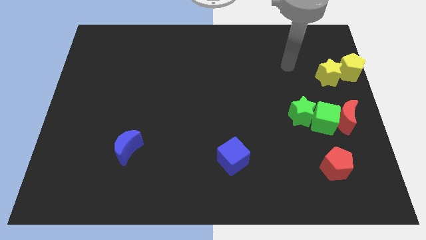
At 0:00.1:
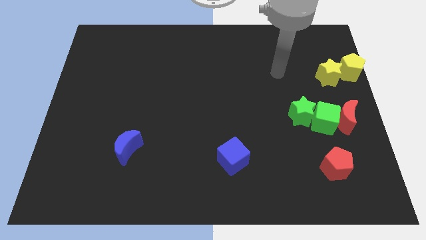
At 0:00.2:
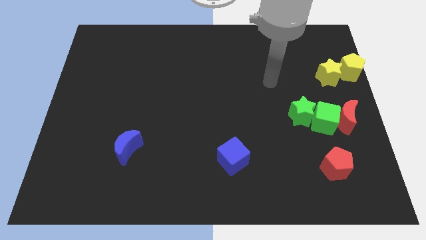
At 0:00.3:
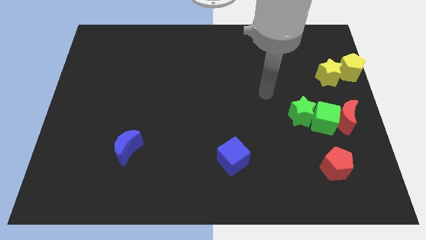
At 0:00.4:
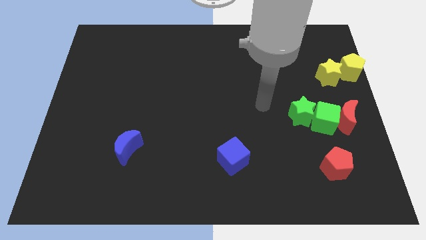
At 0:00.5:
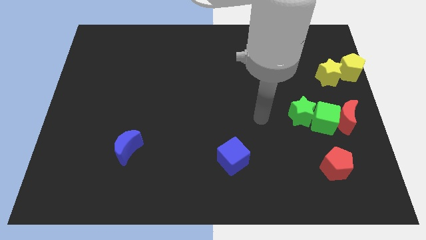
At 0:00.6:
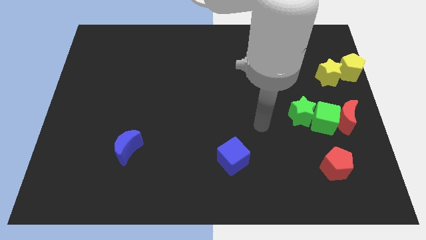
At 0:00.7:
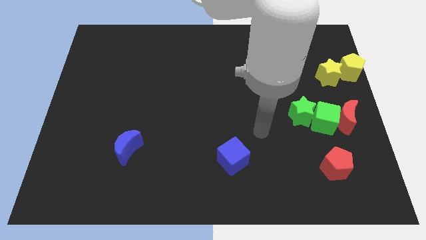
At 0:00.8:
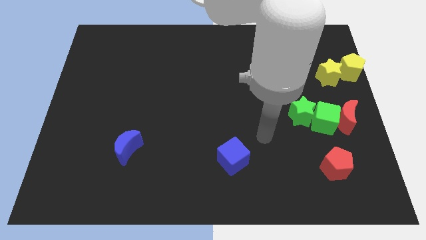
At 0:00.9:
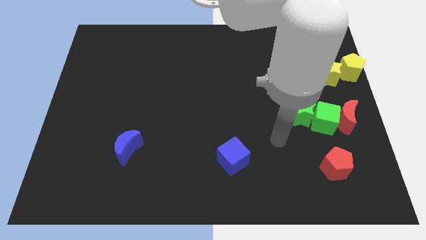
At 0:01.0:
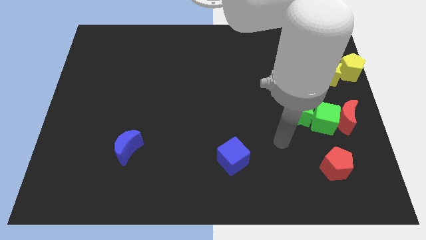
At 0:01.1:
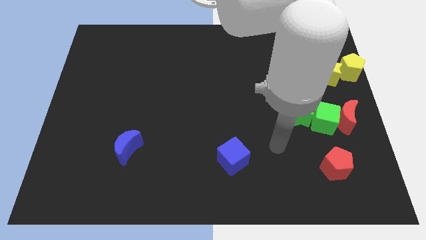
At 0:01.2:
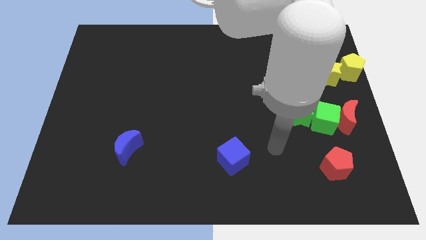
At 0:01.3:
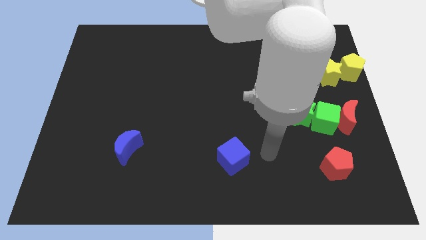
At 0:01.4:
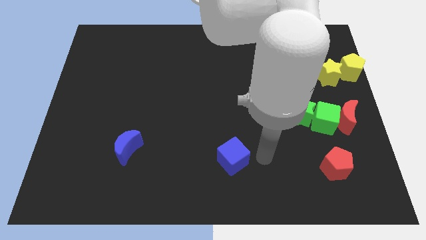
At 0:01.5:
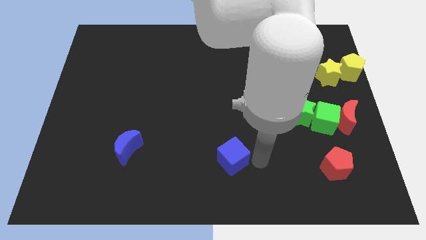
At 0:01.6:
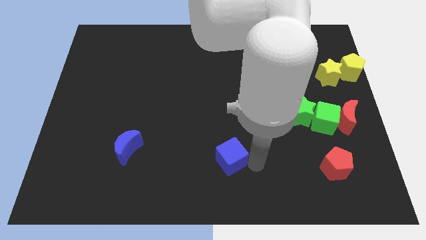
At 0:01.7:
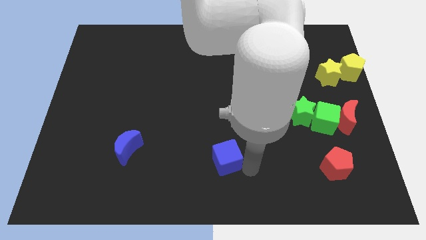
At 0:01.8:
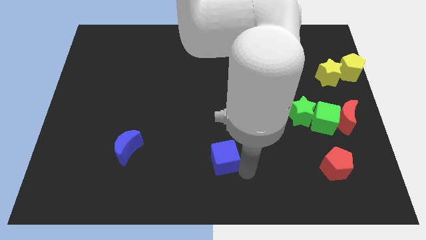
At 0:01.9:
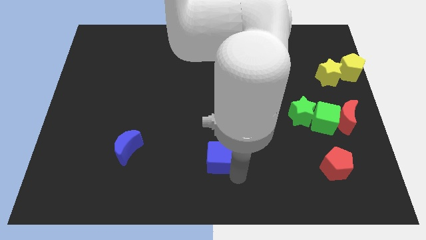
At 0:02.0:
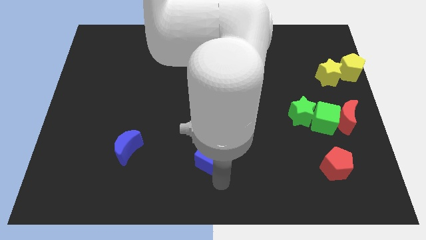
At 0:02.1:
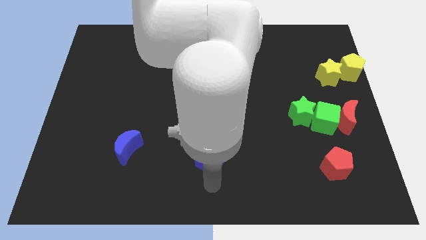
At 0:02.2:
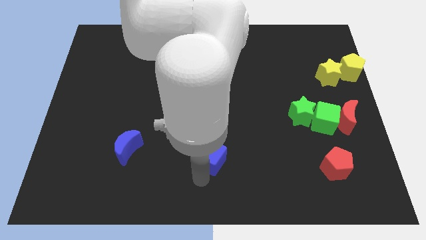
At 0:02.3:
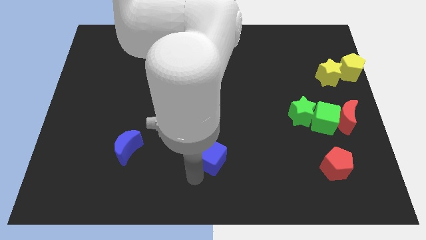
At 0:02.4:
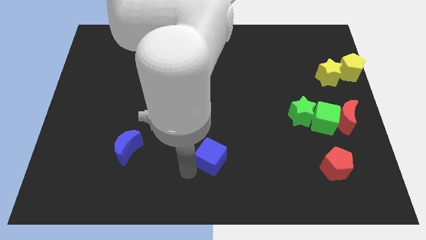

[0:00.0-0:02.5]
slightly move the blue cube towards top

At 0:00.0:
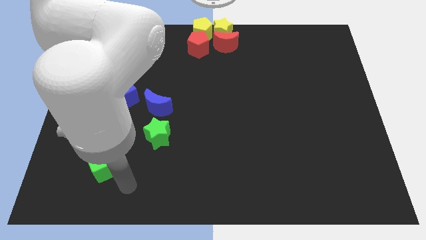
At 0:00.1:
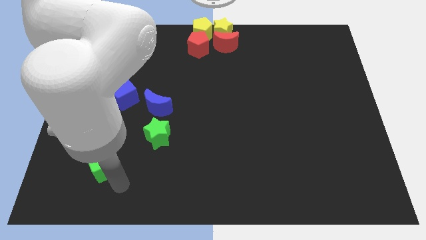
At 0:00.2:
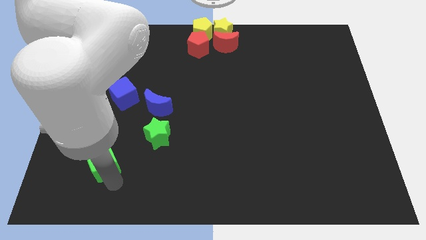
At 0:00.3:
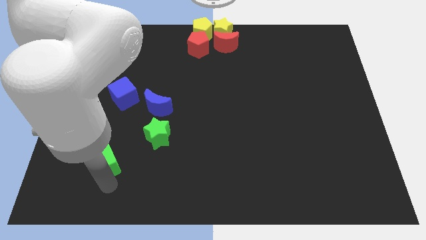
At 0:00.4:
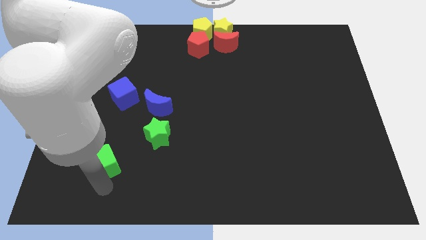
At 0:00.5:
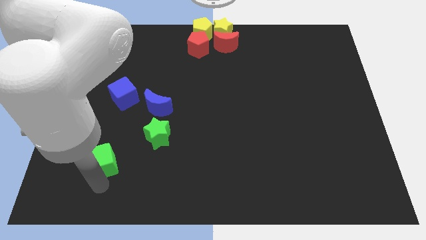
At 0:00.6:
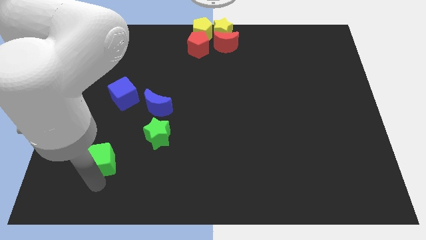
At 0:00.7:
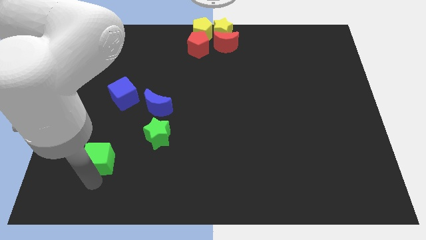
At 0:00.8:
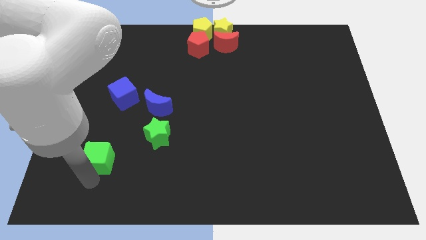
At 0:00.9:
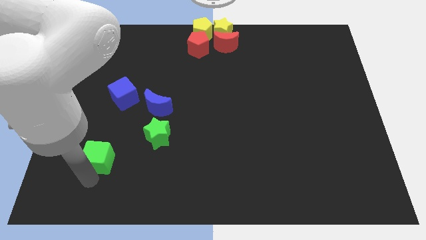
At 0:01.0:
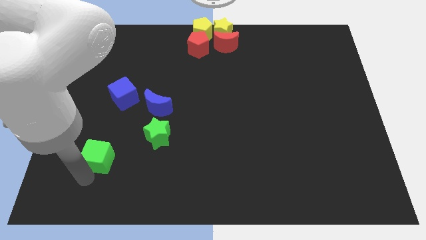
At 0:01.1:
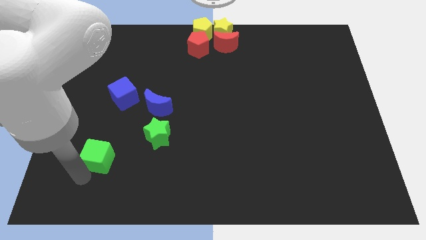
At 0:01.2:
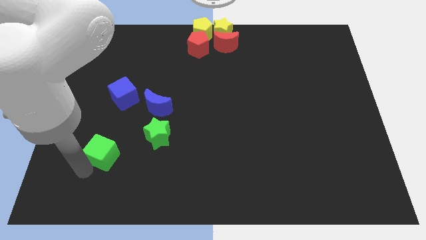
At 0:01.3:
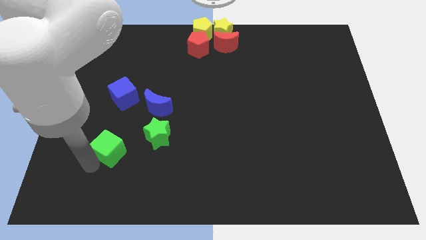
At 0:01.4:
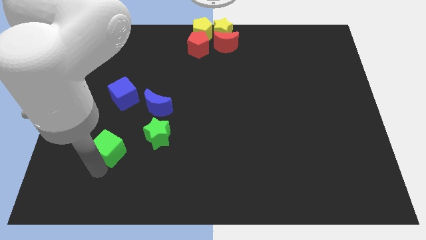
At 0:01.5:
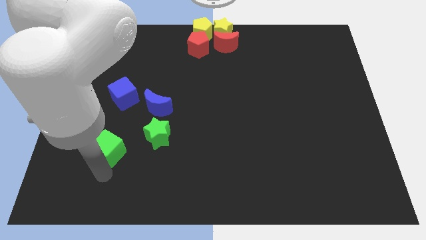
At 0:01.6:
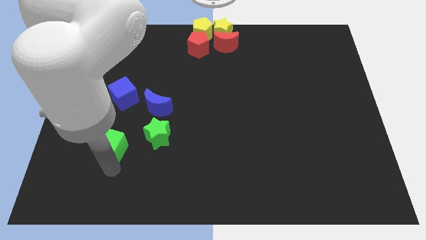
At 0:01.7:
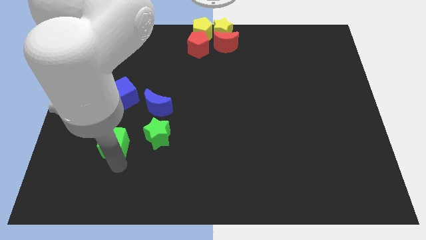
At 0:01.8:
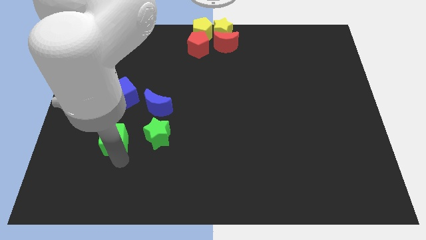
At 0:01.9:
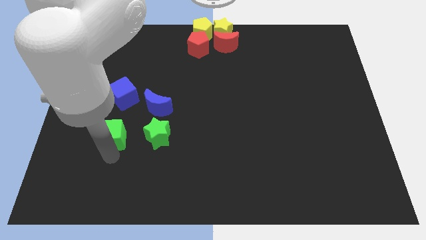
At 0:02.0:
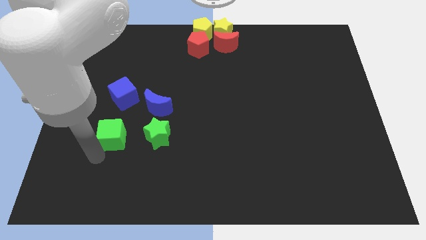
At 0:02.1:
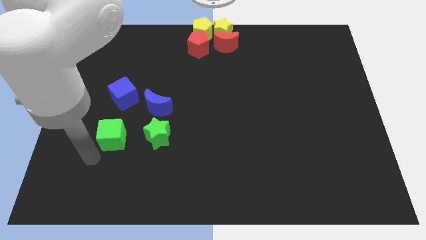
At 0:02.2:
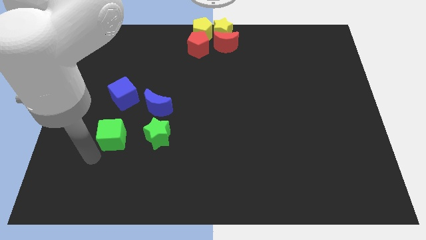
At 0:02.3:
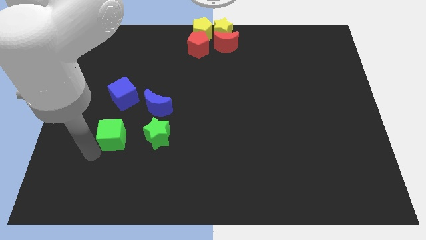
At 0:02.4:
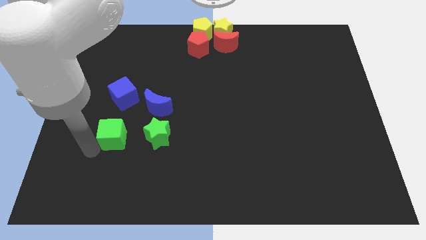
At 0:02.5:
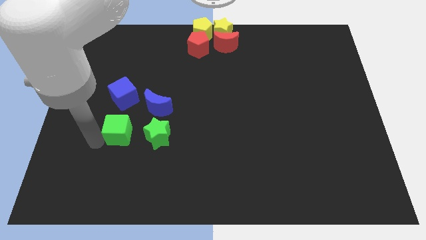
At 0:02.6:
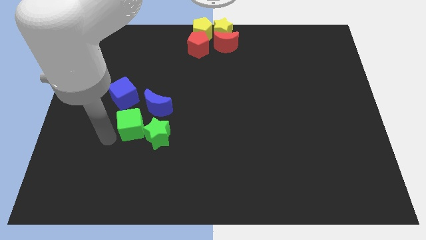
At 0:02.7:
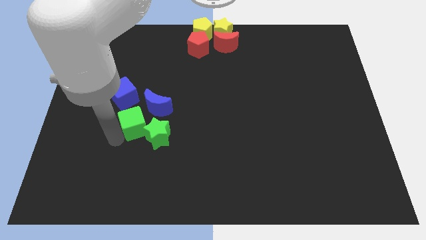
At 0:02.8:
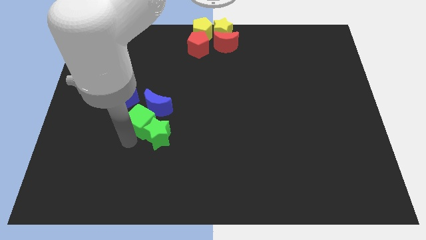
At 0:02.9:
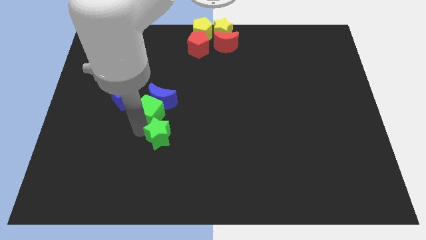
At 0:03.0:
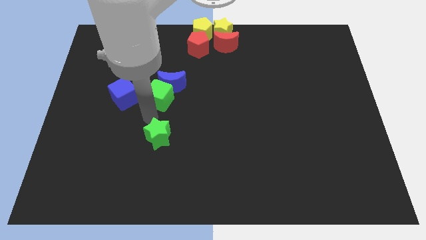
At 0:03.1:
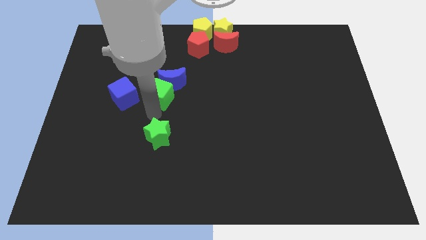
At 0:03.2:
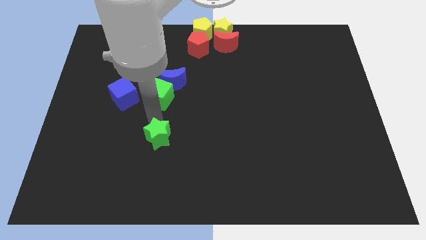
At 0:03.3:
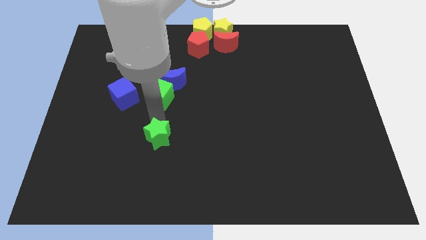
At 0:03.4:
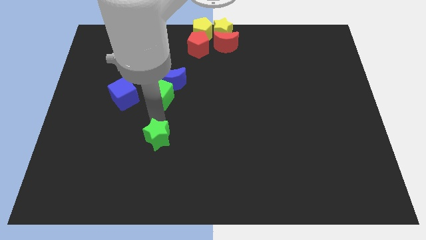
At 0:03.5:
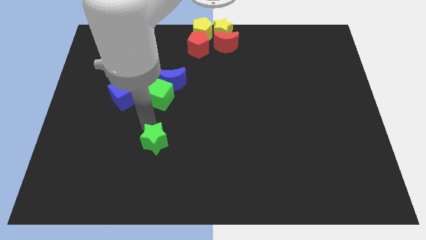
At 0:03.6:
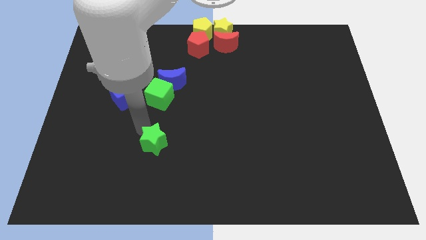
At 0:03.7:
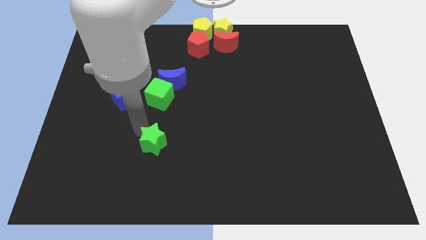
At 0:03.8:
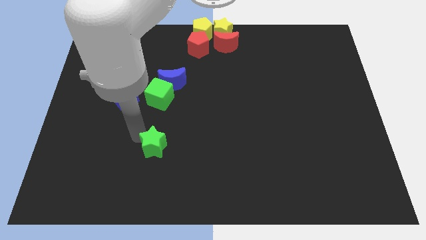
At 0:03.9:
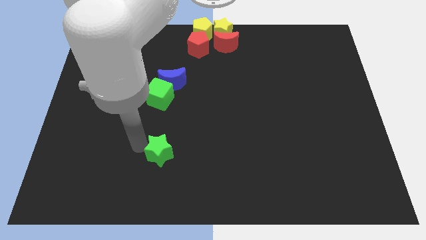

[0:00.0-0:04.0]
push green block along with blue crescent towards top of the board

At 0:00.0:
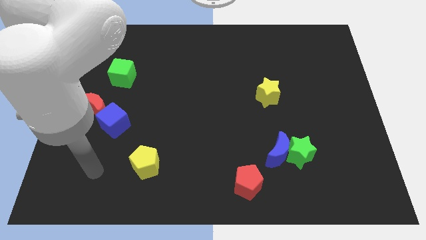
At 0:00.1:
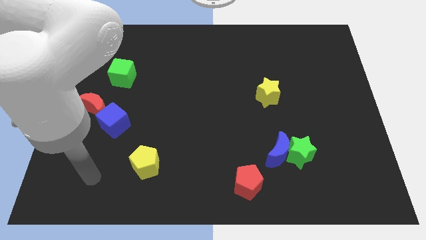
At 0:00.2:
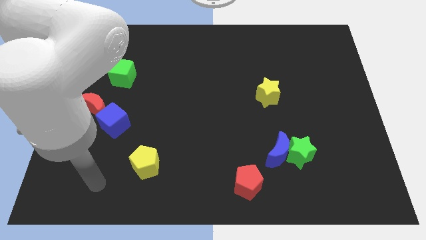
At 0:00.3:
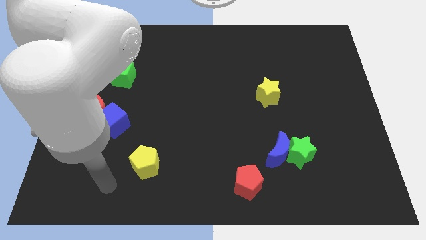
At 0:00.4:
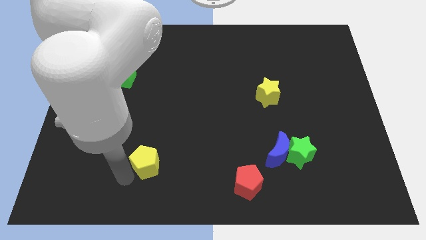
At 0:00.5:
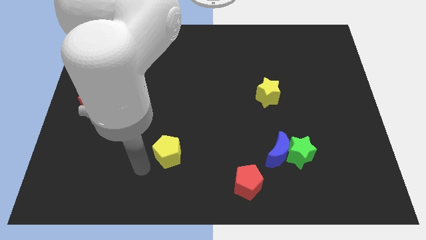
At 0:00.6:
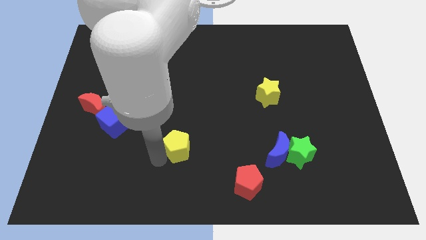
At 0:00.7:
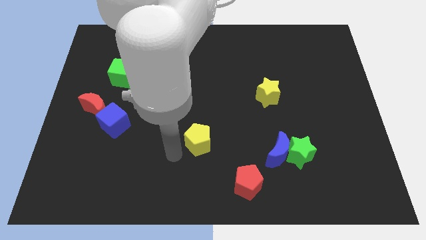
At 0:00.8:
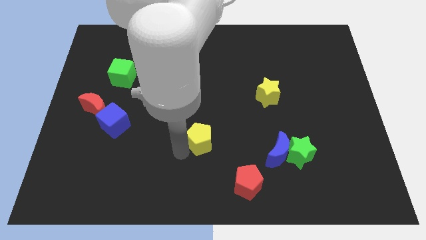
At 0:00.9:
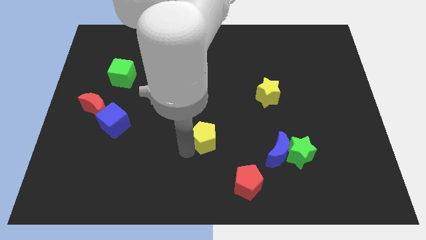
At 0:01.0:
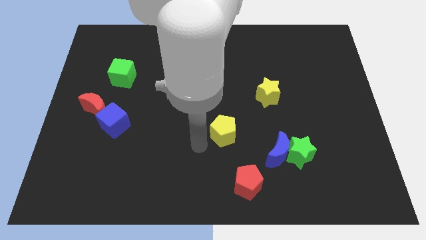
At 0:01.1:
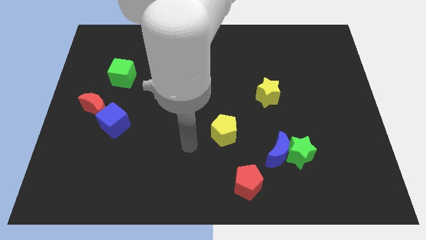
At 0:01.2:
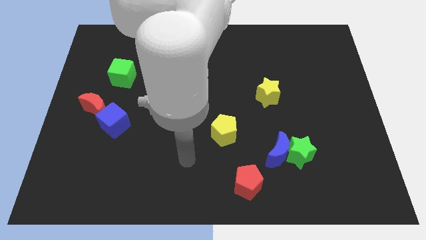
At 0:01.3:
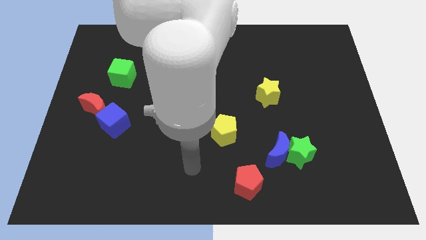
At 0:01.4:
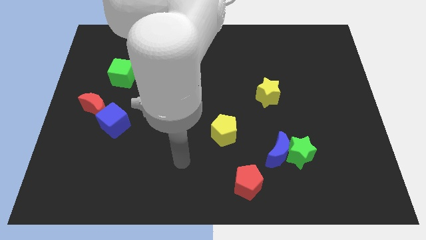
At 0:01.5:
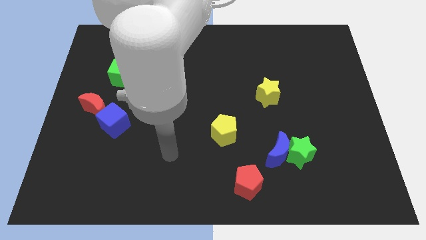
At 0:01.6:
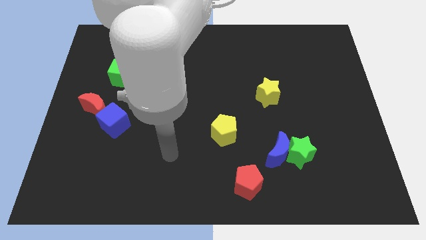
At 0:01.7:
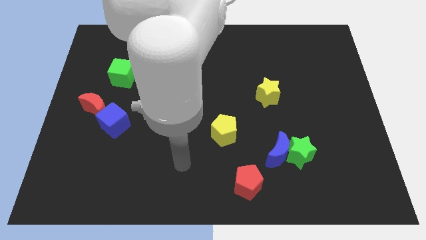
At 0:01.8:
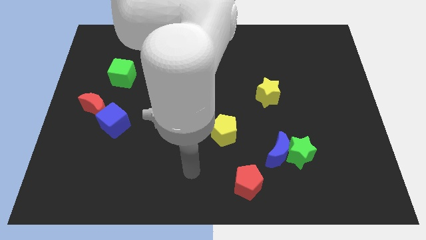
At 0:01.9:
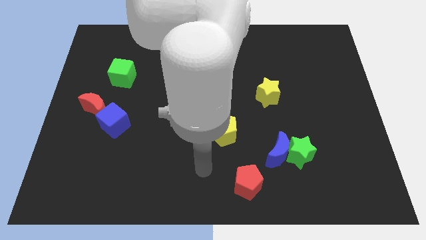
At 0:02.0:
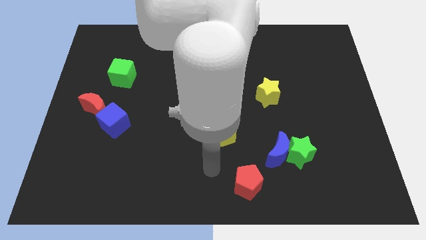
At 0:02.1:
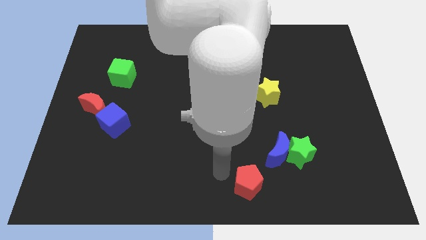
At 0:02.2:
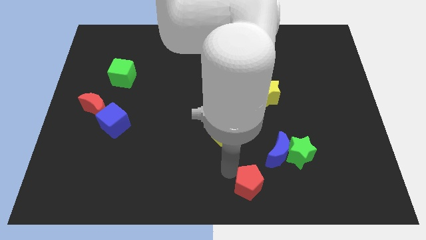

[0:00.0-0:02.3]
push yellow pentagon towards the center

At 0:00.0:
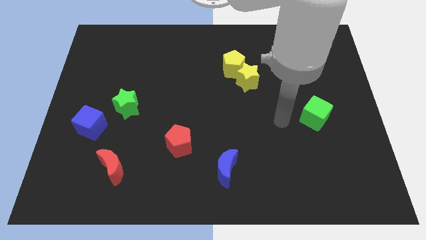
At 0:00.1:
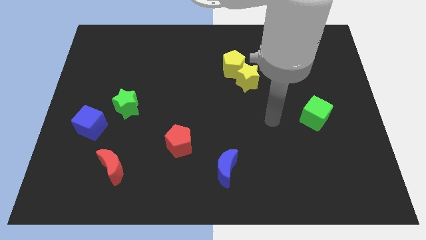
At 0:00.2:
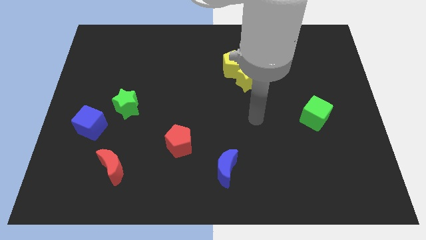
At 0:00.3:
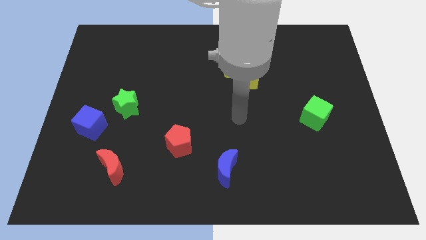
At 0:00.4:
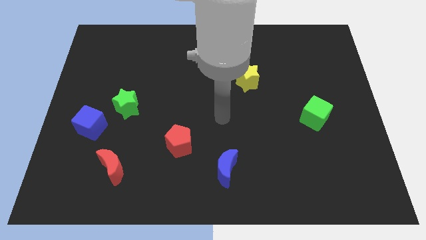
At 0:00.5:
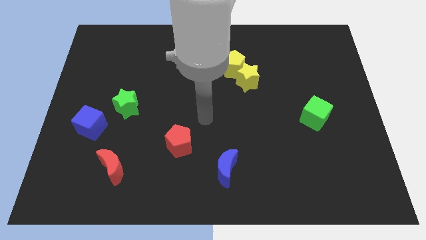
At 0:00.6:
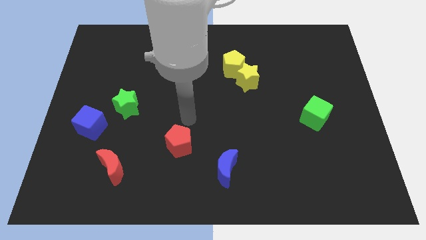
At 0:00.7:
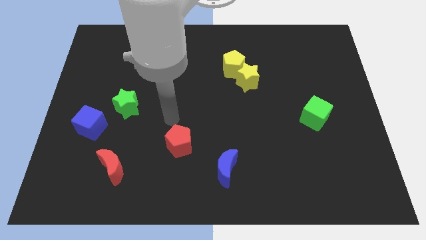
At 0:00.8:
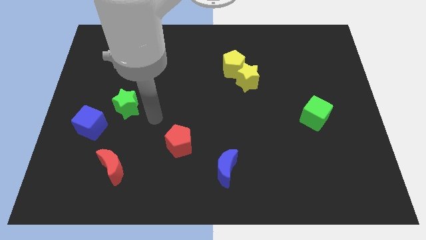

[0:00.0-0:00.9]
place your arm to the top of red pentagon
